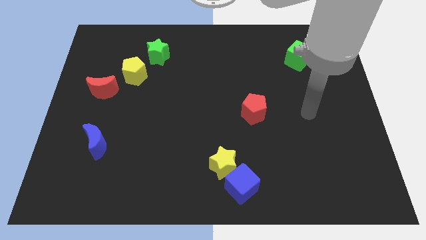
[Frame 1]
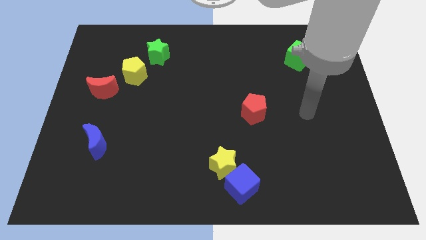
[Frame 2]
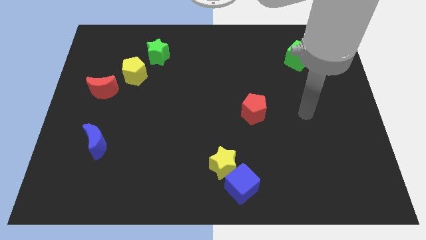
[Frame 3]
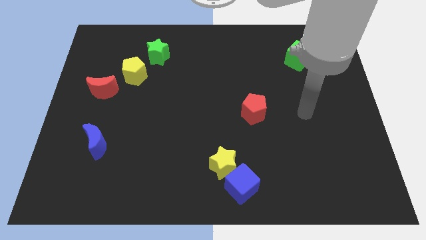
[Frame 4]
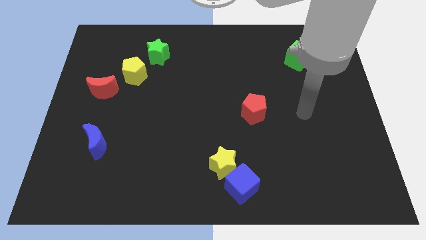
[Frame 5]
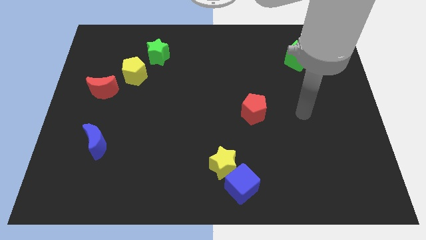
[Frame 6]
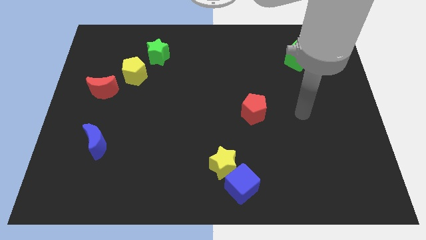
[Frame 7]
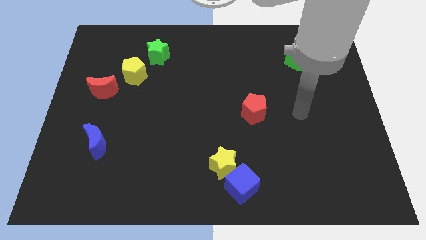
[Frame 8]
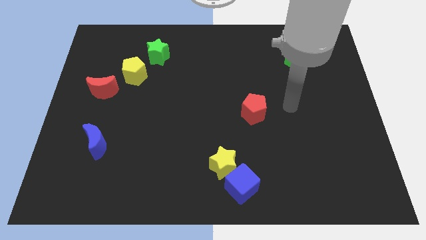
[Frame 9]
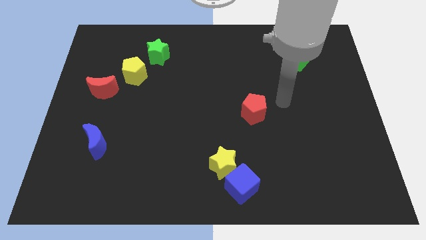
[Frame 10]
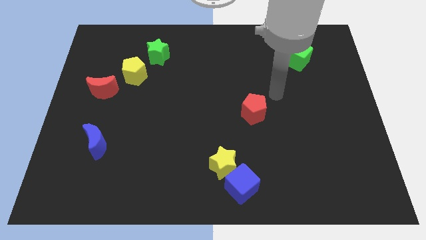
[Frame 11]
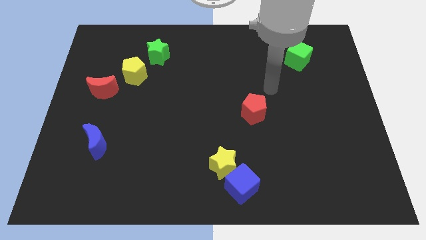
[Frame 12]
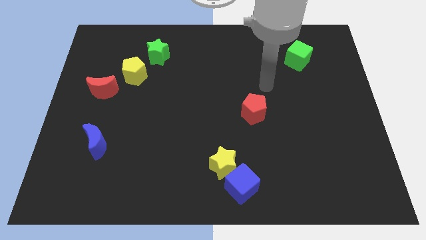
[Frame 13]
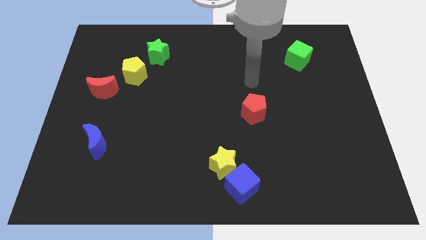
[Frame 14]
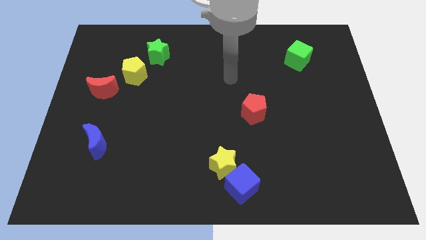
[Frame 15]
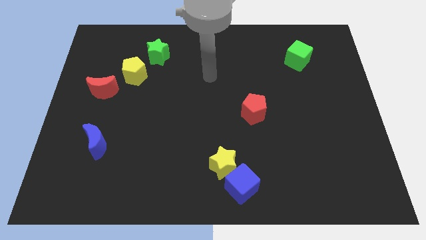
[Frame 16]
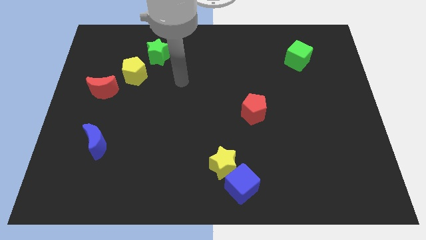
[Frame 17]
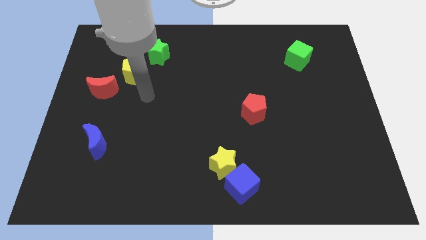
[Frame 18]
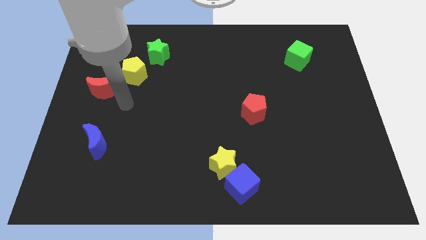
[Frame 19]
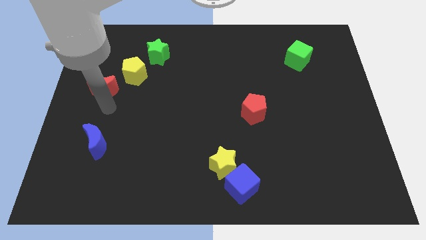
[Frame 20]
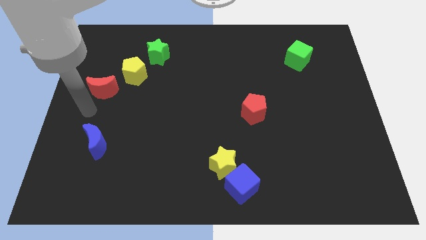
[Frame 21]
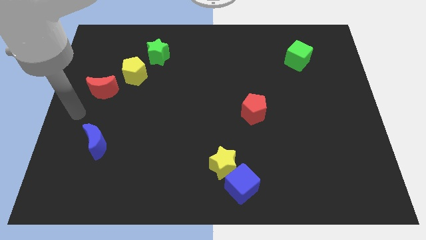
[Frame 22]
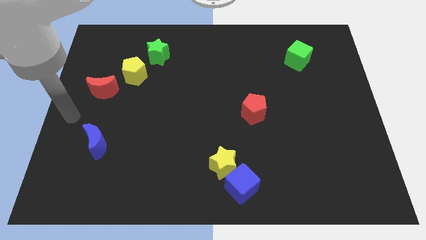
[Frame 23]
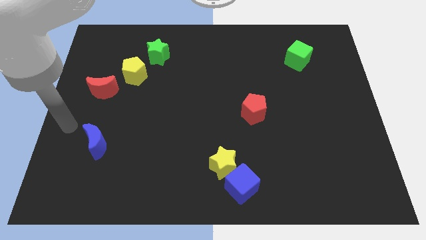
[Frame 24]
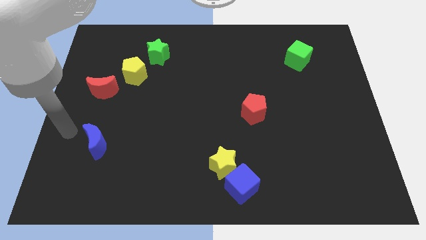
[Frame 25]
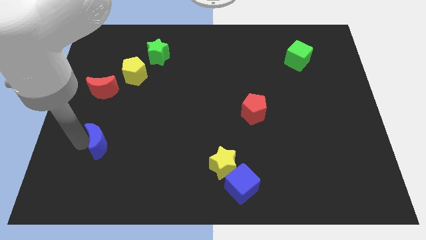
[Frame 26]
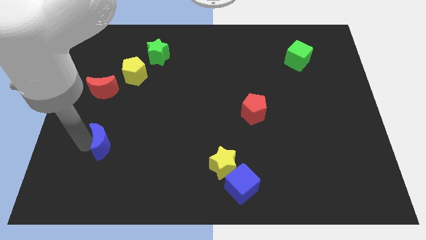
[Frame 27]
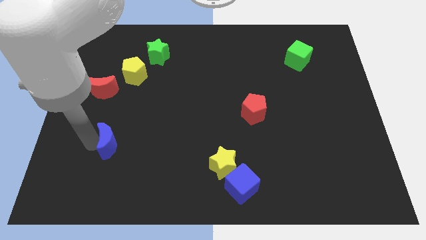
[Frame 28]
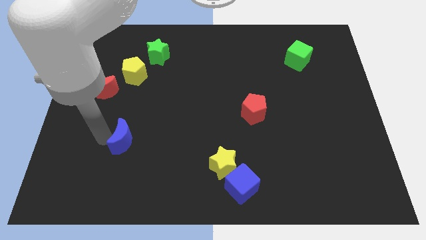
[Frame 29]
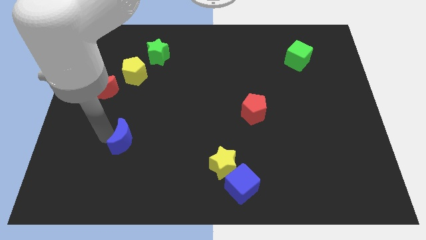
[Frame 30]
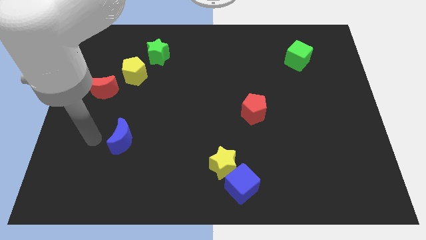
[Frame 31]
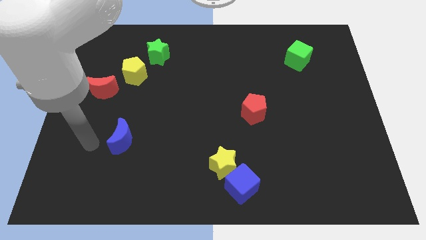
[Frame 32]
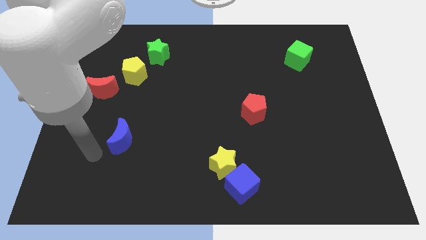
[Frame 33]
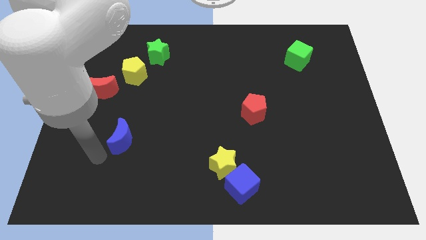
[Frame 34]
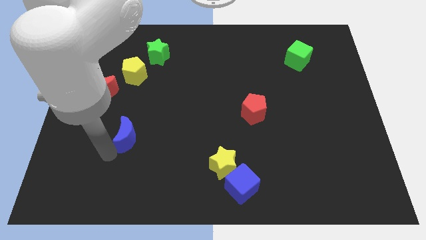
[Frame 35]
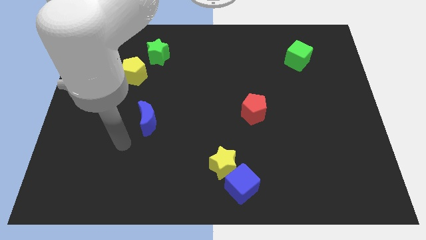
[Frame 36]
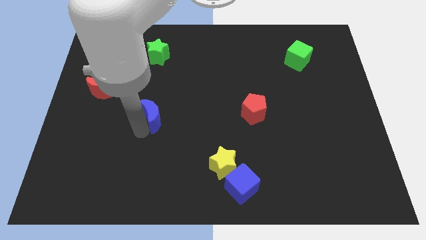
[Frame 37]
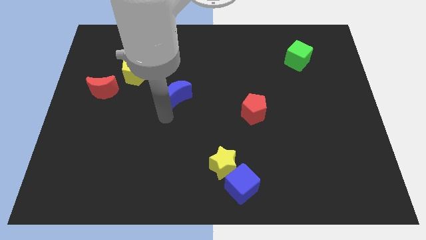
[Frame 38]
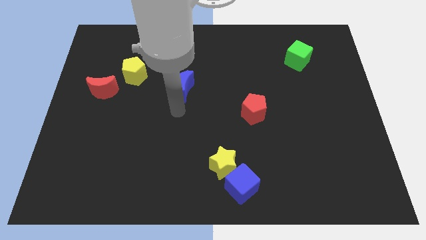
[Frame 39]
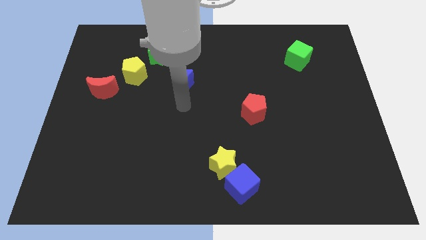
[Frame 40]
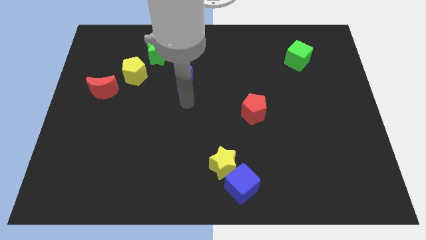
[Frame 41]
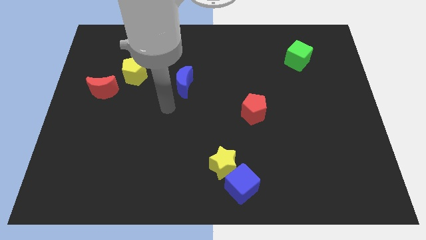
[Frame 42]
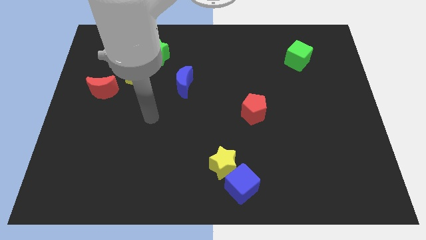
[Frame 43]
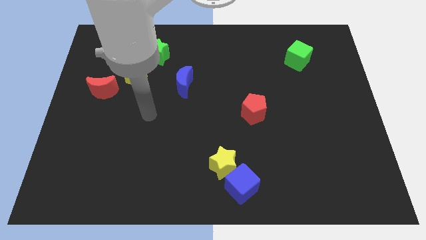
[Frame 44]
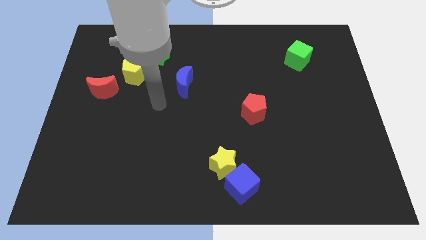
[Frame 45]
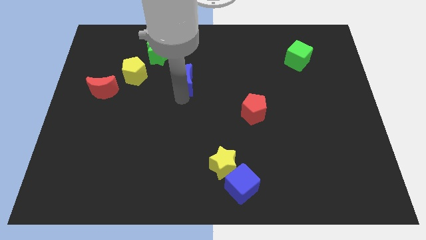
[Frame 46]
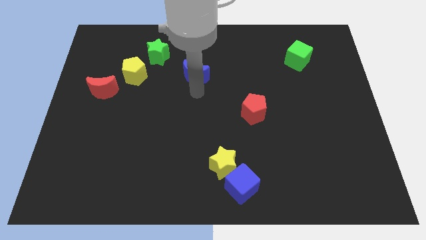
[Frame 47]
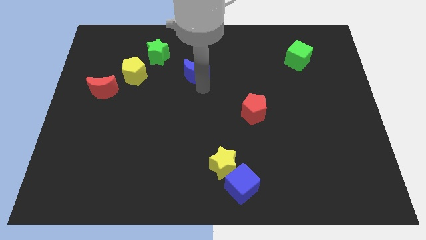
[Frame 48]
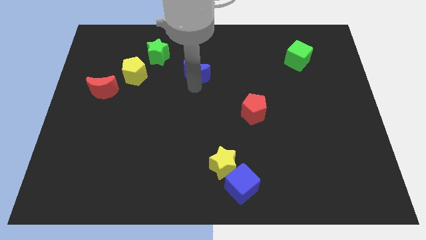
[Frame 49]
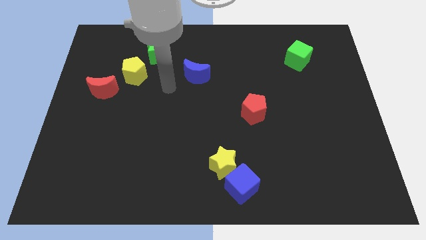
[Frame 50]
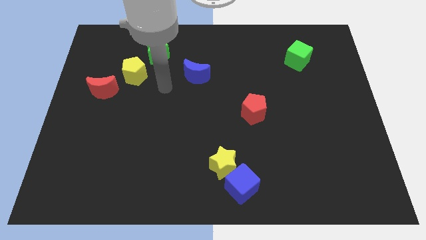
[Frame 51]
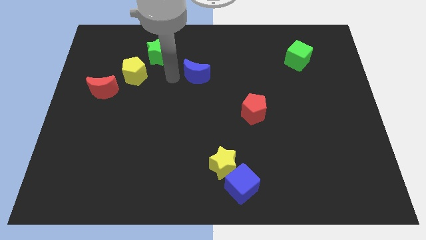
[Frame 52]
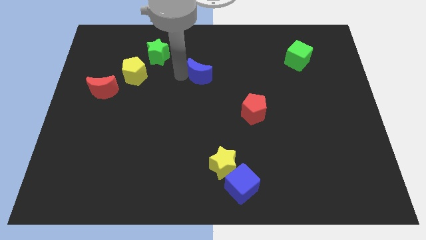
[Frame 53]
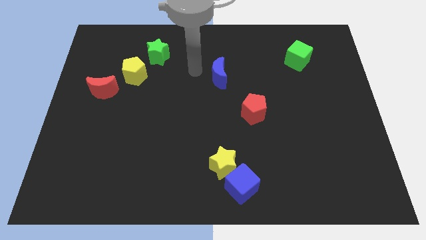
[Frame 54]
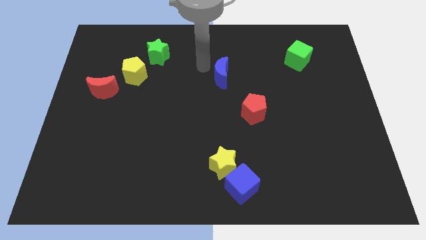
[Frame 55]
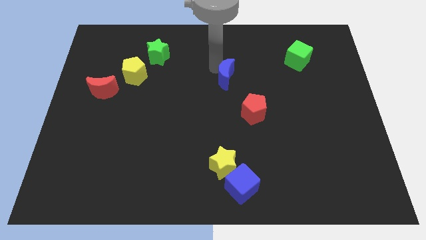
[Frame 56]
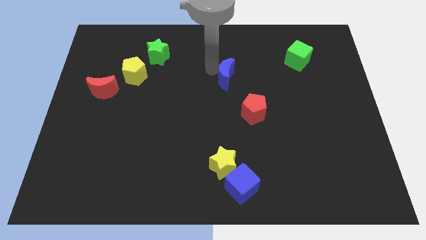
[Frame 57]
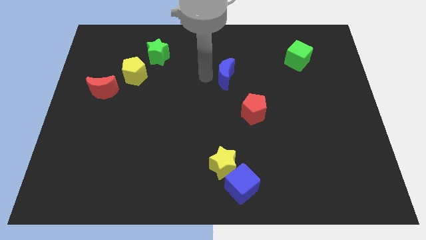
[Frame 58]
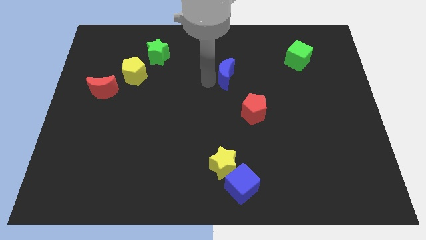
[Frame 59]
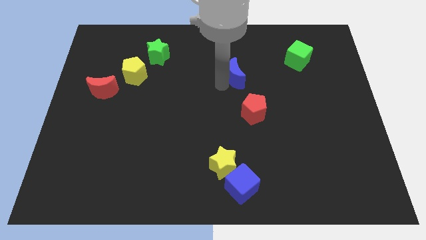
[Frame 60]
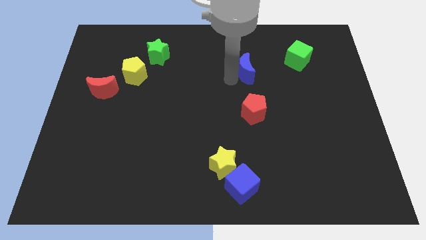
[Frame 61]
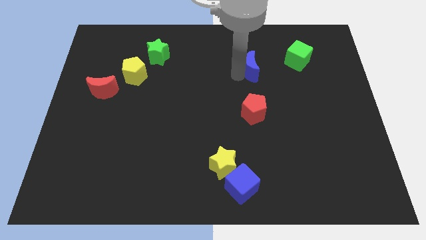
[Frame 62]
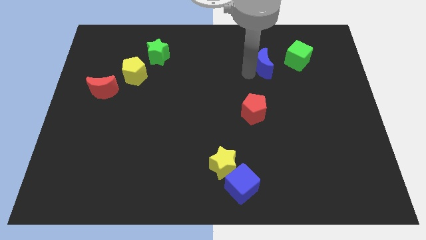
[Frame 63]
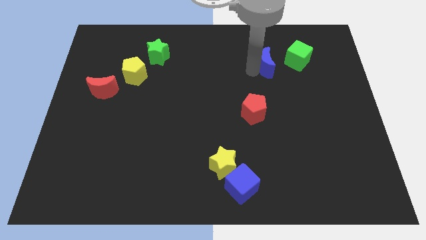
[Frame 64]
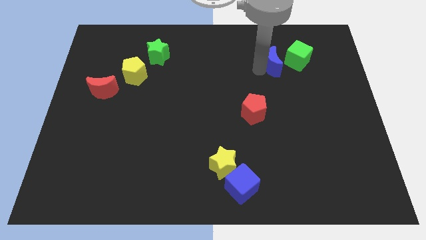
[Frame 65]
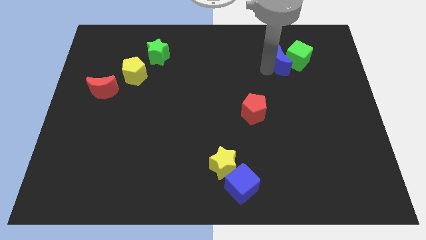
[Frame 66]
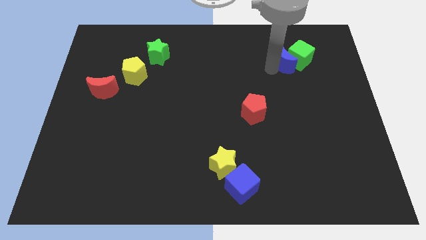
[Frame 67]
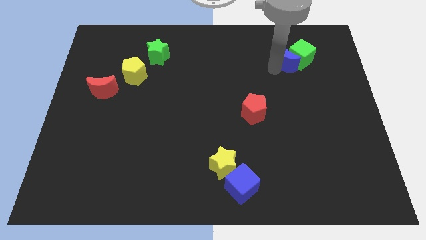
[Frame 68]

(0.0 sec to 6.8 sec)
push the blue moon towards the green cube

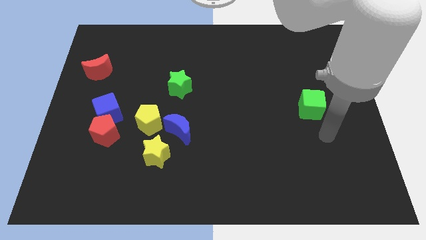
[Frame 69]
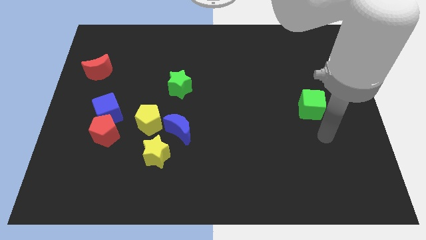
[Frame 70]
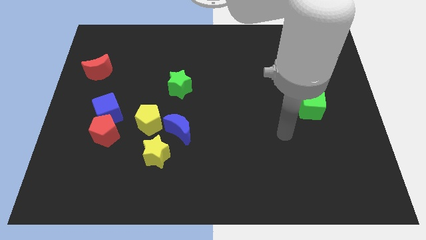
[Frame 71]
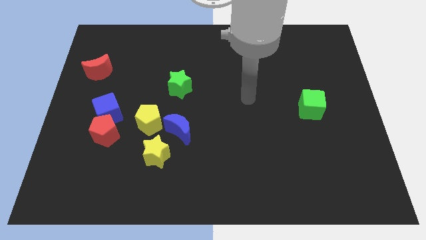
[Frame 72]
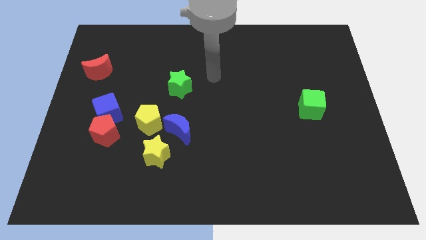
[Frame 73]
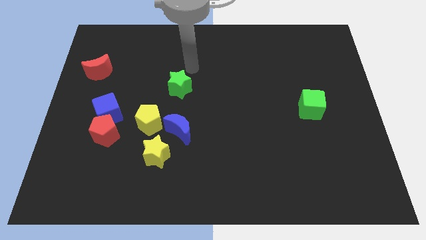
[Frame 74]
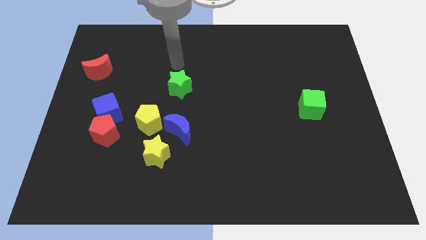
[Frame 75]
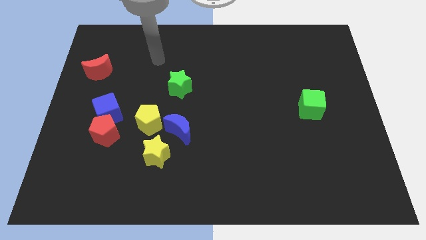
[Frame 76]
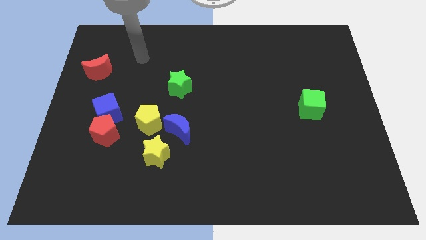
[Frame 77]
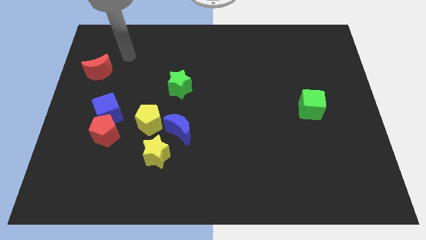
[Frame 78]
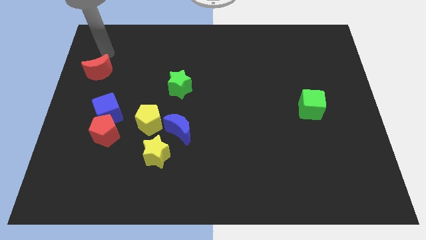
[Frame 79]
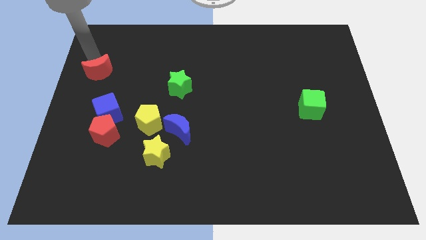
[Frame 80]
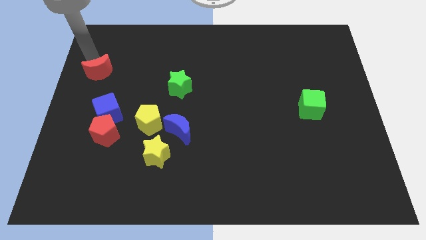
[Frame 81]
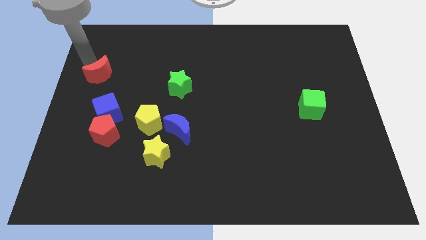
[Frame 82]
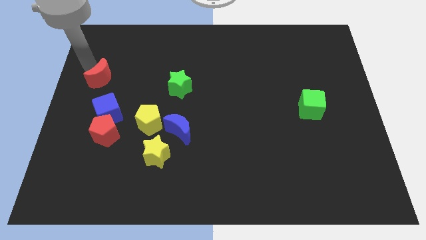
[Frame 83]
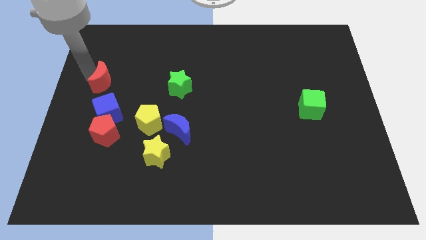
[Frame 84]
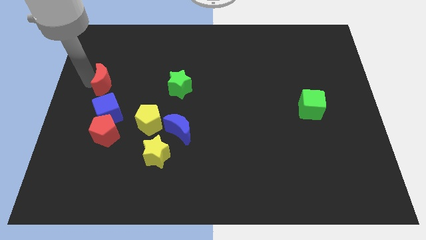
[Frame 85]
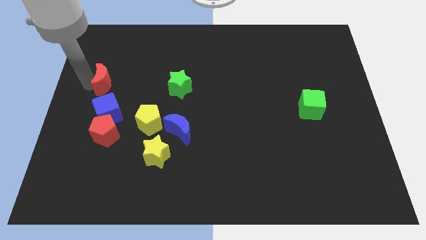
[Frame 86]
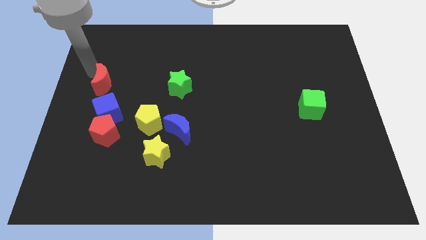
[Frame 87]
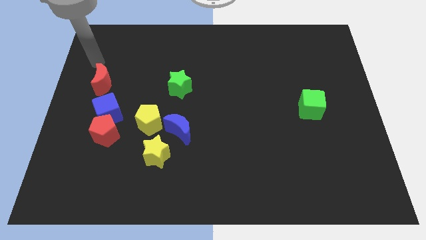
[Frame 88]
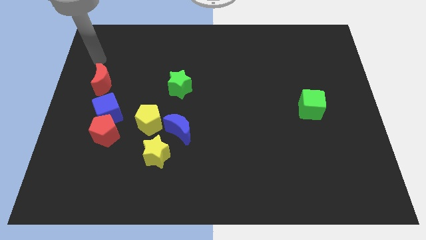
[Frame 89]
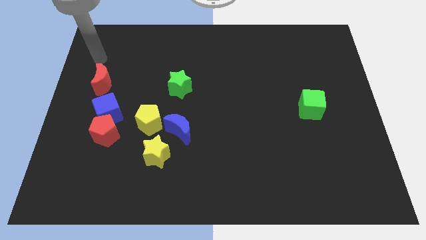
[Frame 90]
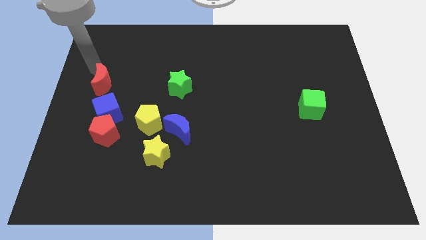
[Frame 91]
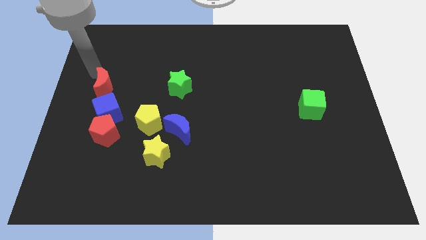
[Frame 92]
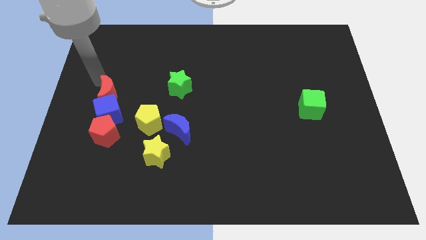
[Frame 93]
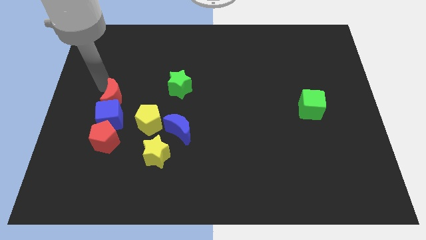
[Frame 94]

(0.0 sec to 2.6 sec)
move the red moon next to the blue cube
